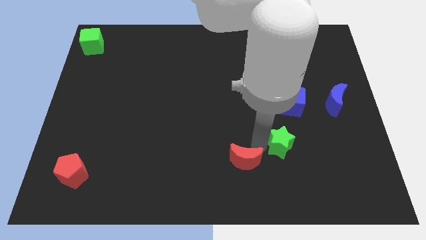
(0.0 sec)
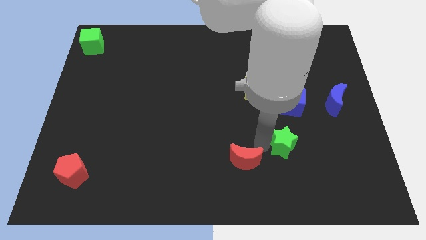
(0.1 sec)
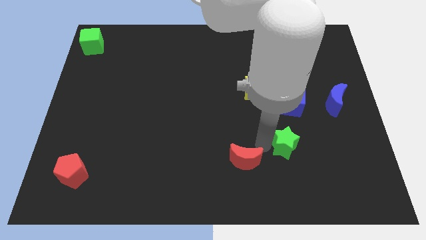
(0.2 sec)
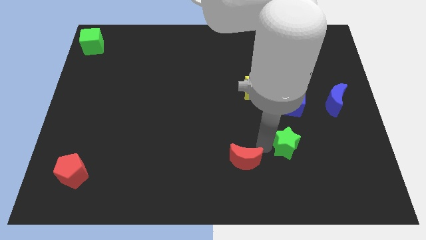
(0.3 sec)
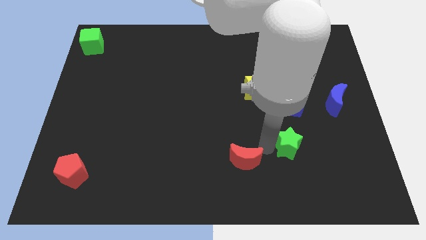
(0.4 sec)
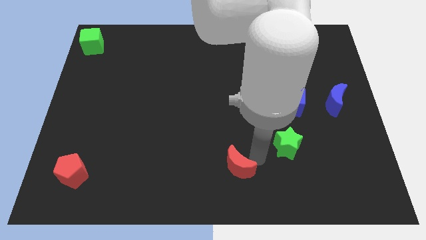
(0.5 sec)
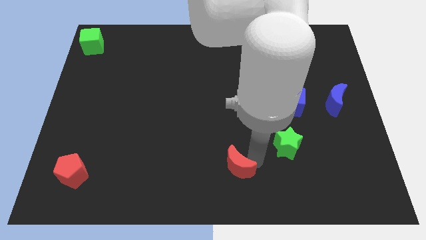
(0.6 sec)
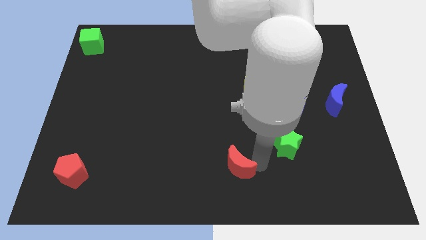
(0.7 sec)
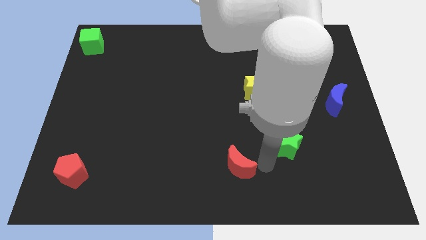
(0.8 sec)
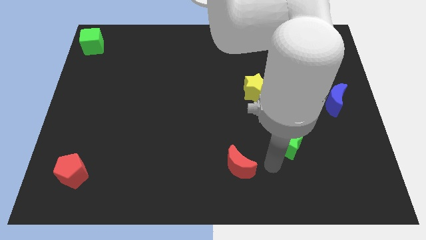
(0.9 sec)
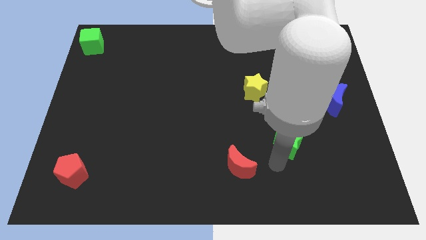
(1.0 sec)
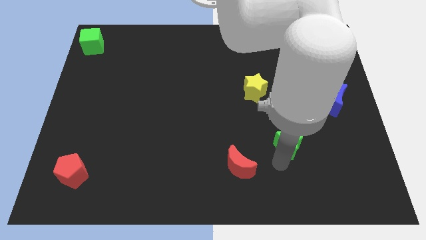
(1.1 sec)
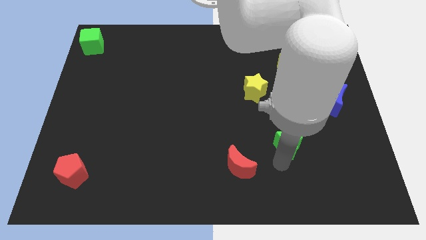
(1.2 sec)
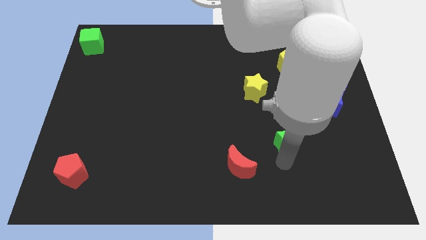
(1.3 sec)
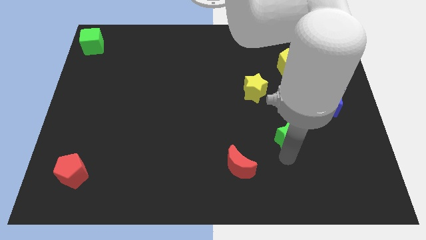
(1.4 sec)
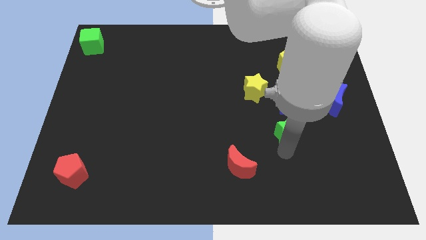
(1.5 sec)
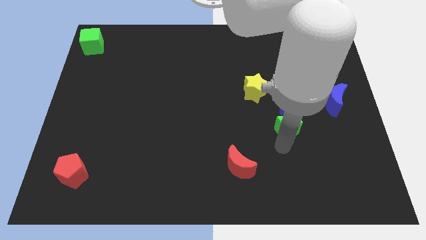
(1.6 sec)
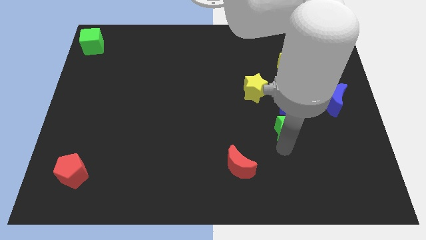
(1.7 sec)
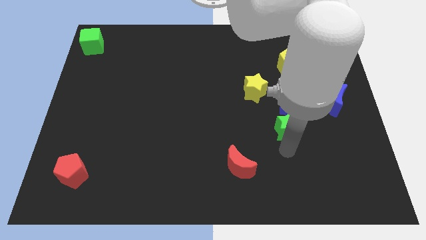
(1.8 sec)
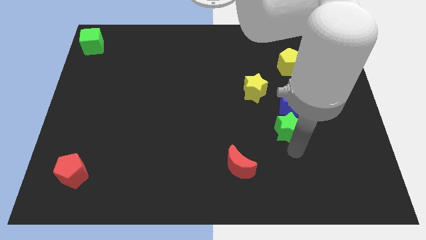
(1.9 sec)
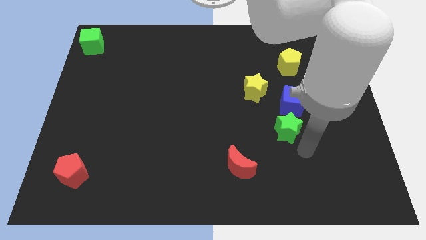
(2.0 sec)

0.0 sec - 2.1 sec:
separate green star from red moon

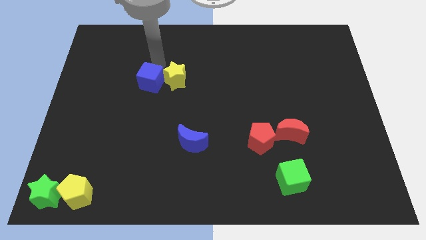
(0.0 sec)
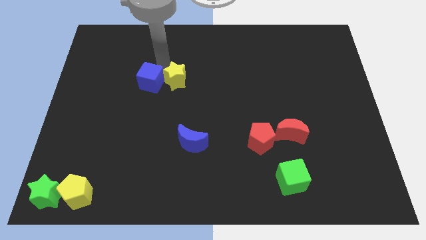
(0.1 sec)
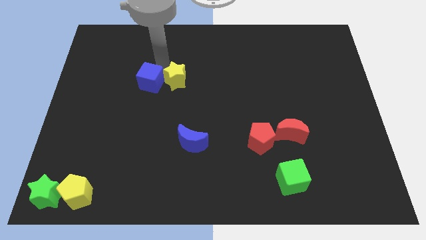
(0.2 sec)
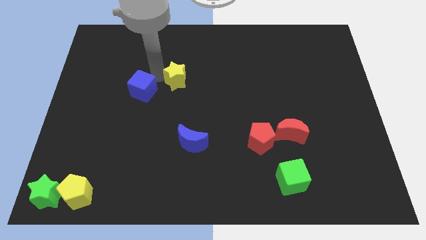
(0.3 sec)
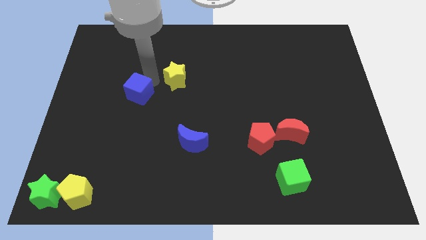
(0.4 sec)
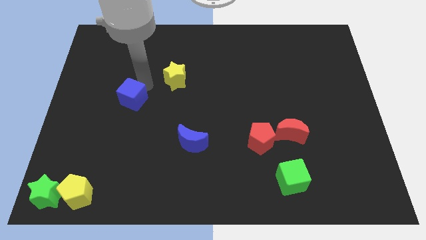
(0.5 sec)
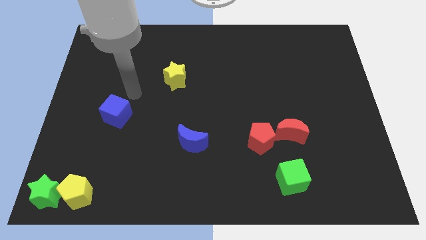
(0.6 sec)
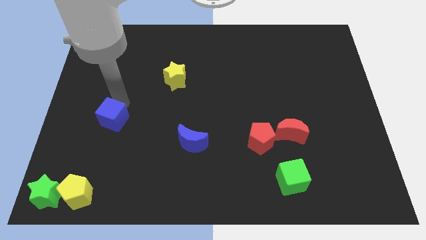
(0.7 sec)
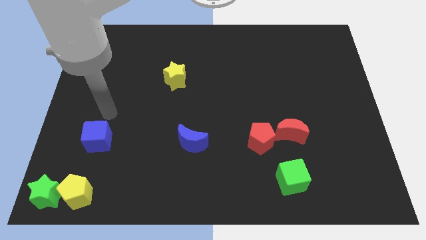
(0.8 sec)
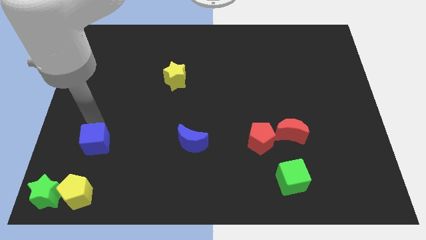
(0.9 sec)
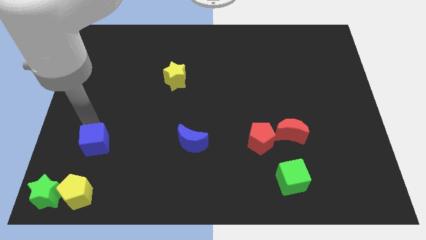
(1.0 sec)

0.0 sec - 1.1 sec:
push the blue cube away from the yellow star

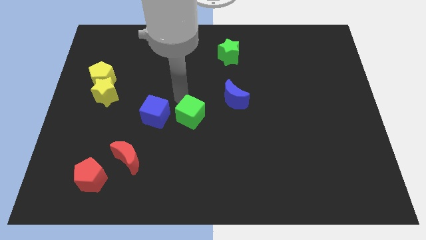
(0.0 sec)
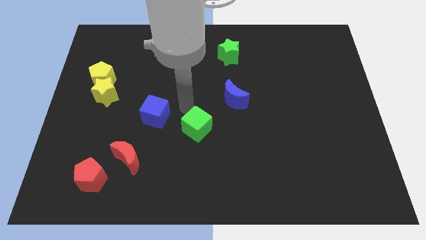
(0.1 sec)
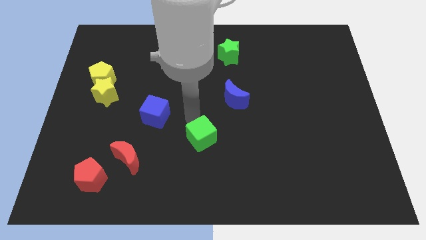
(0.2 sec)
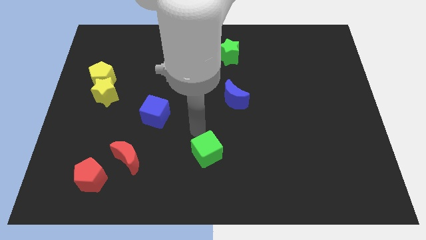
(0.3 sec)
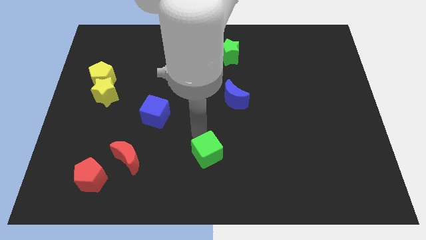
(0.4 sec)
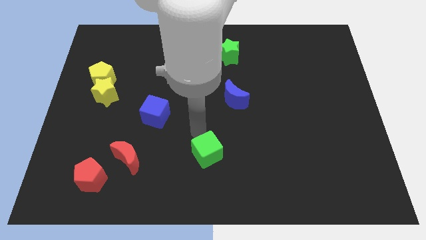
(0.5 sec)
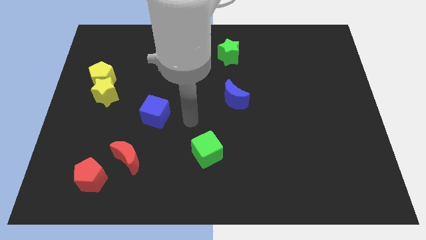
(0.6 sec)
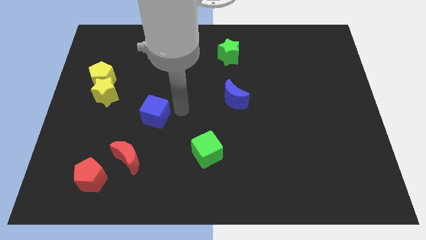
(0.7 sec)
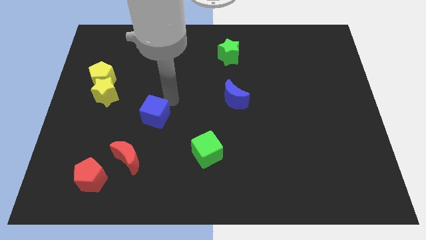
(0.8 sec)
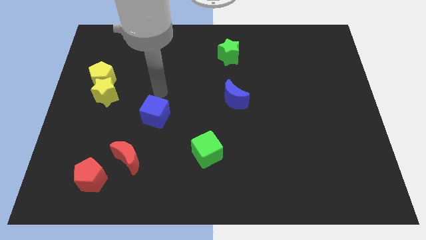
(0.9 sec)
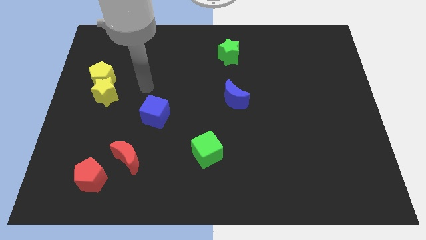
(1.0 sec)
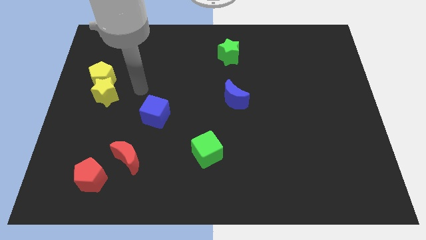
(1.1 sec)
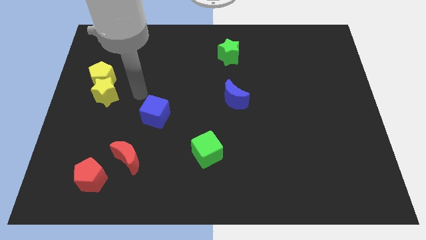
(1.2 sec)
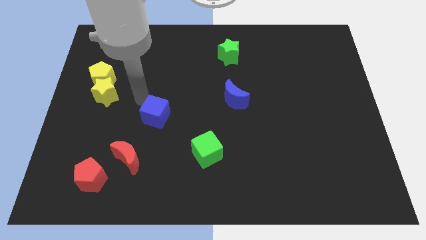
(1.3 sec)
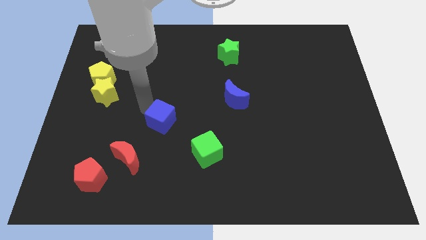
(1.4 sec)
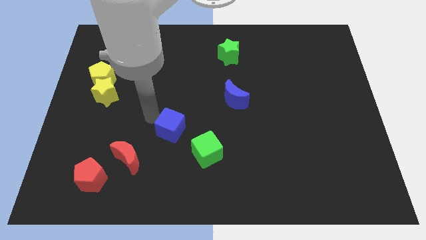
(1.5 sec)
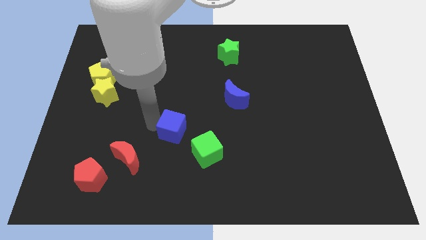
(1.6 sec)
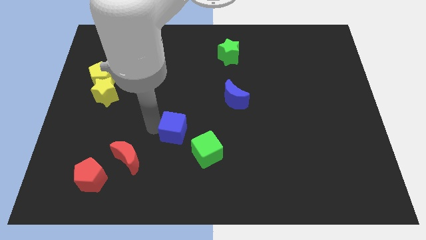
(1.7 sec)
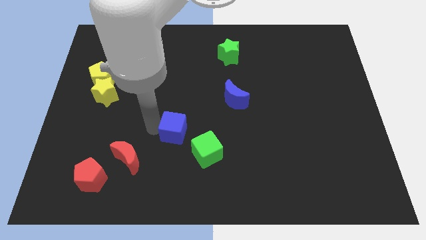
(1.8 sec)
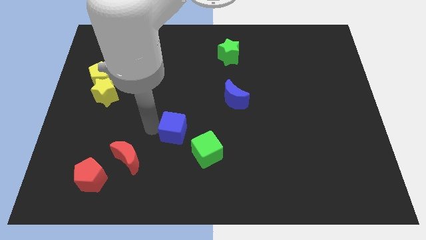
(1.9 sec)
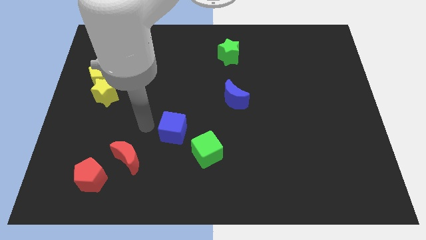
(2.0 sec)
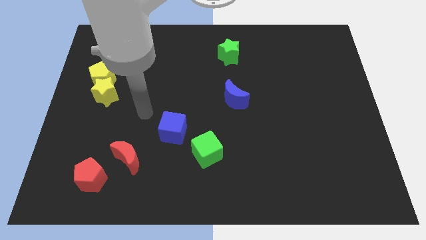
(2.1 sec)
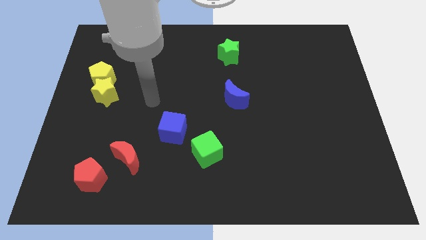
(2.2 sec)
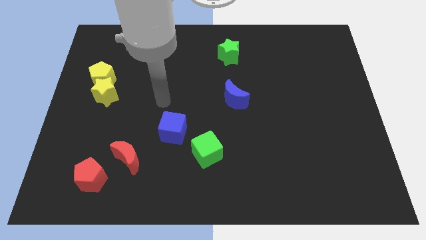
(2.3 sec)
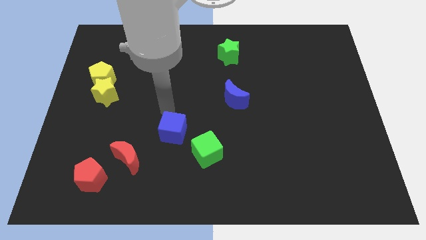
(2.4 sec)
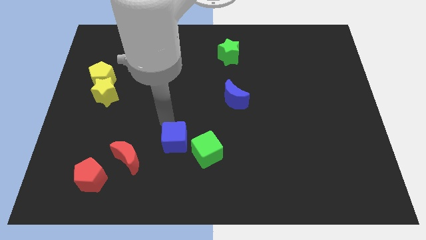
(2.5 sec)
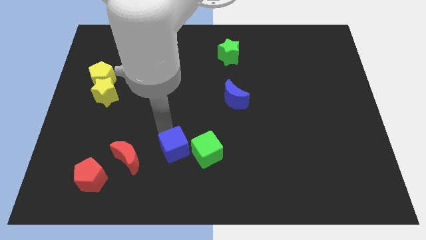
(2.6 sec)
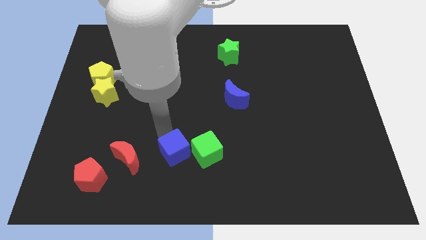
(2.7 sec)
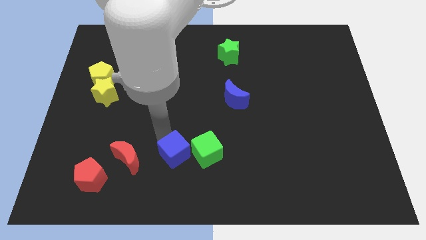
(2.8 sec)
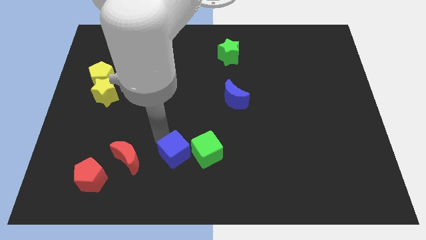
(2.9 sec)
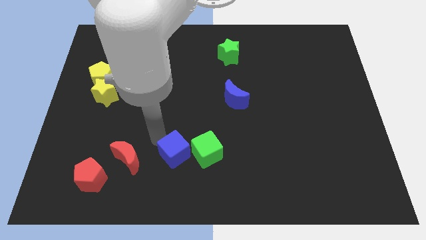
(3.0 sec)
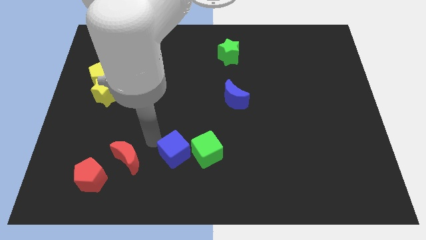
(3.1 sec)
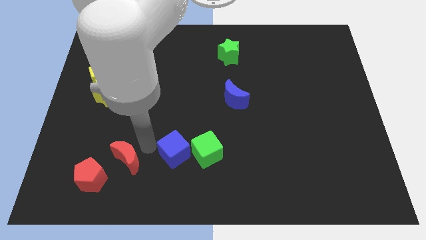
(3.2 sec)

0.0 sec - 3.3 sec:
push blue cube and green cube right to red blocks

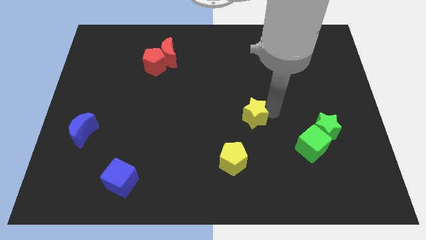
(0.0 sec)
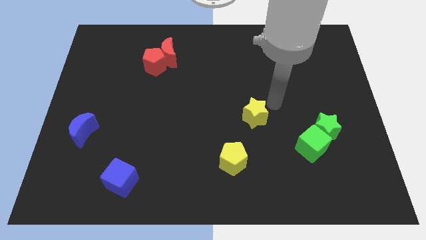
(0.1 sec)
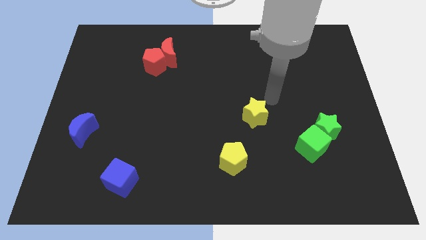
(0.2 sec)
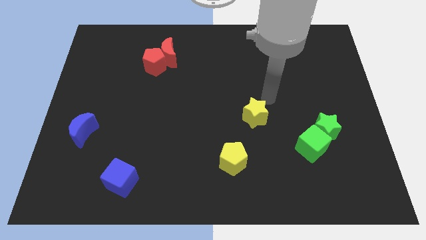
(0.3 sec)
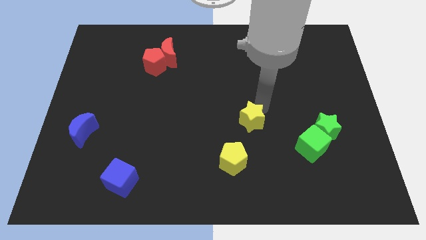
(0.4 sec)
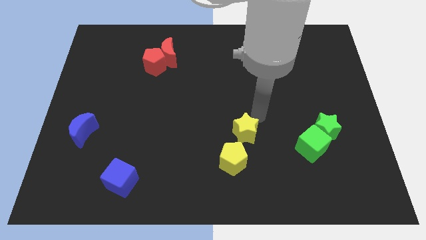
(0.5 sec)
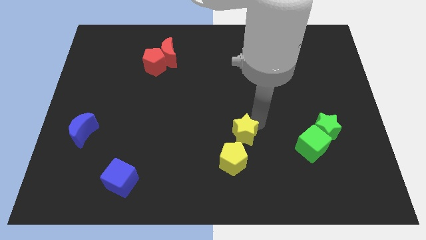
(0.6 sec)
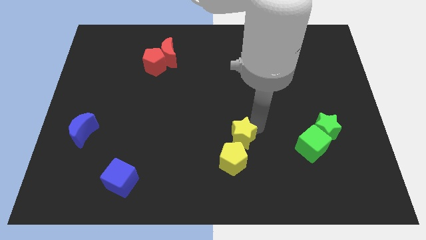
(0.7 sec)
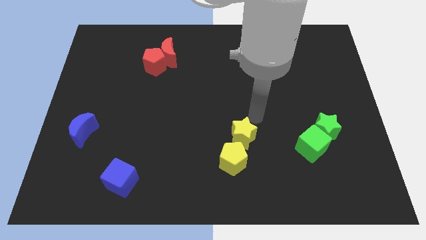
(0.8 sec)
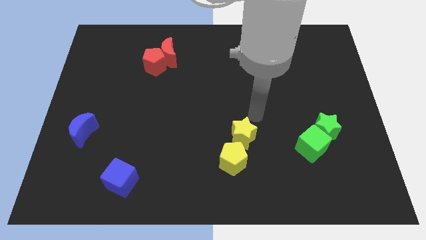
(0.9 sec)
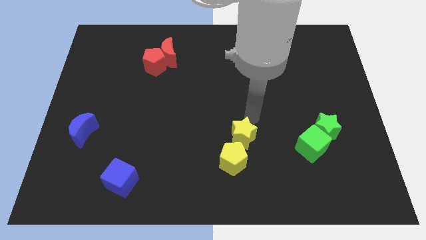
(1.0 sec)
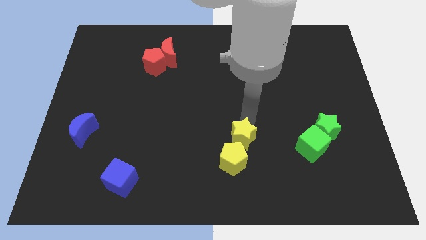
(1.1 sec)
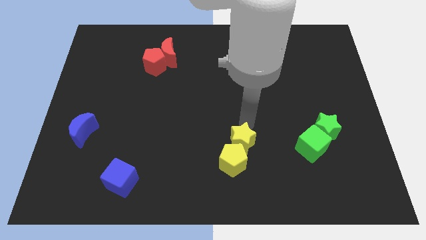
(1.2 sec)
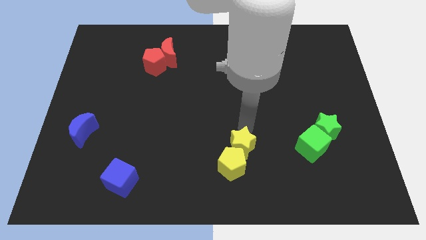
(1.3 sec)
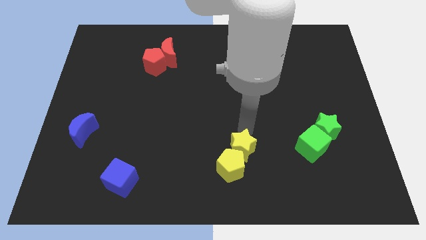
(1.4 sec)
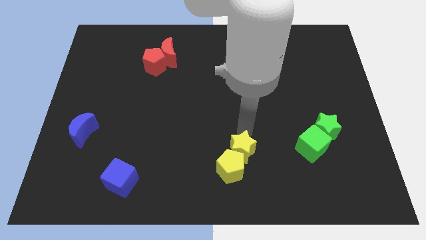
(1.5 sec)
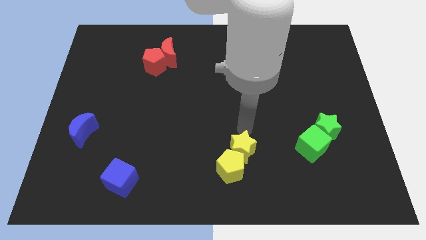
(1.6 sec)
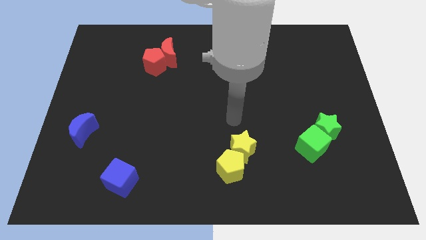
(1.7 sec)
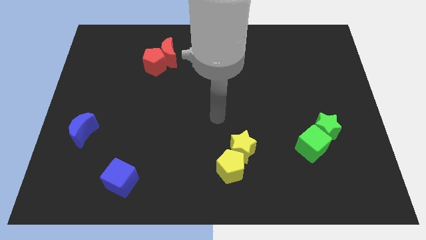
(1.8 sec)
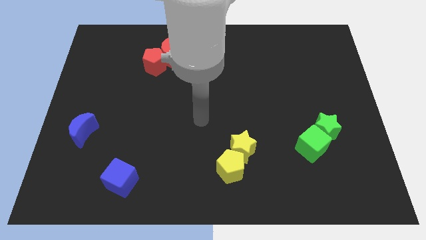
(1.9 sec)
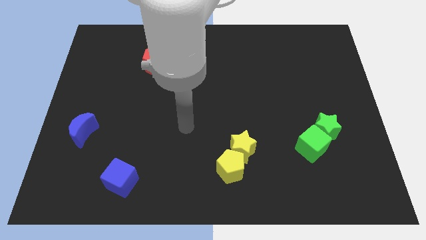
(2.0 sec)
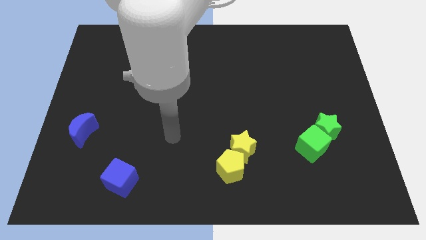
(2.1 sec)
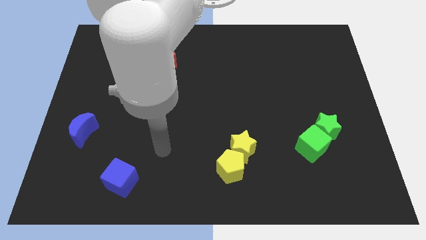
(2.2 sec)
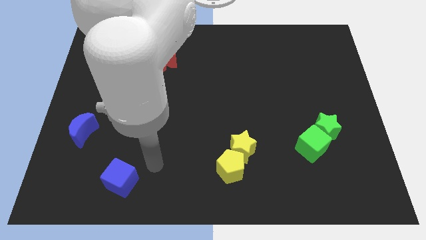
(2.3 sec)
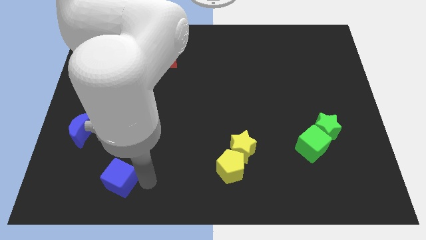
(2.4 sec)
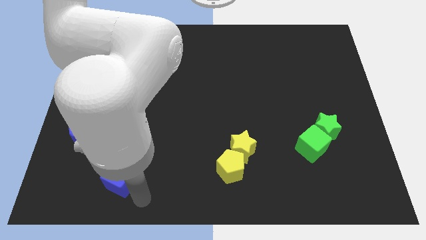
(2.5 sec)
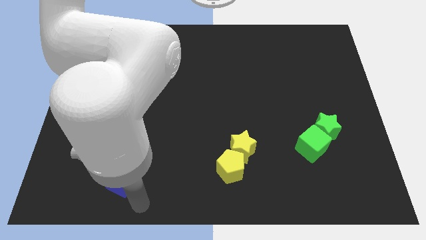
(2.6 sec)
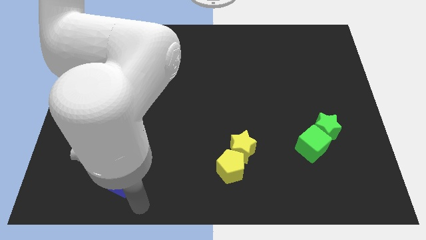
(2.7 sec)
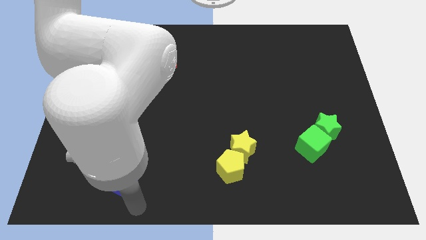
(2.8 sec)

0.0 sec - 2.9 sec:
move yellow star close to yellow pentagon
